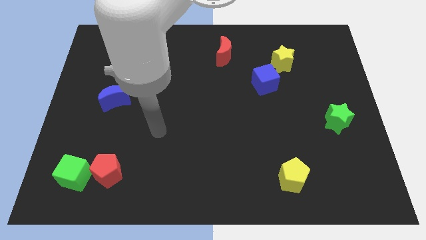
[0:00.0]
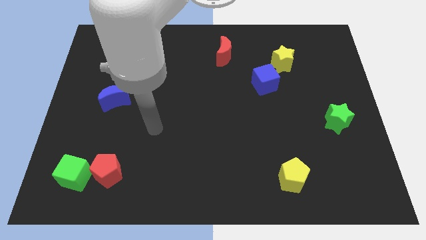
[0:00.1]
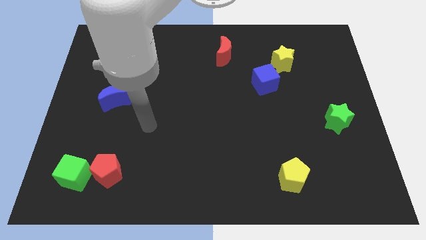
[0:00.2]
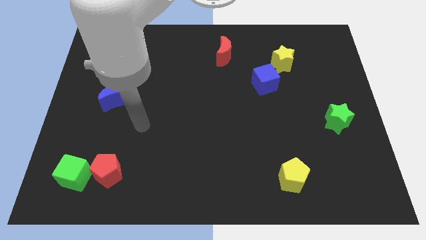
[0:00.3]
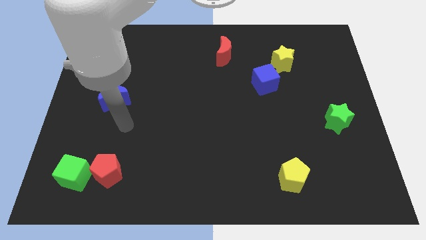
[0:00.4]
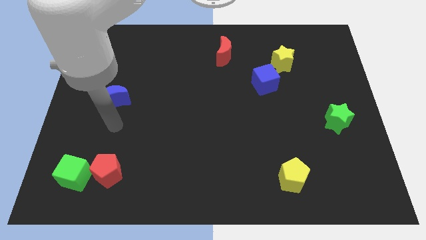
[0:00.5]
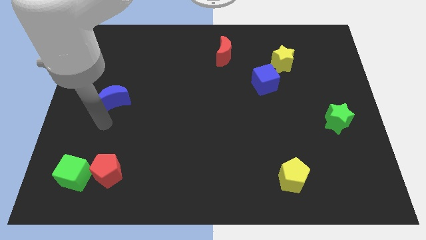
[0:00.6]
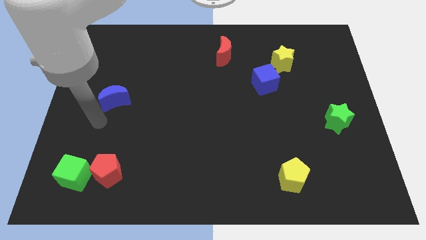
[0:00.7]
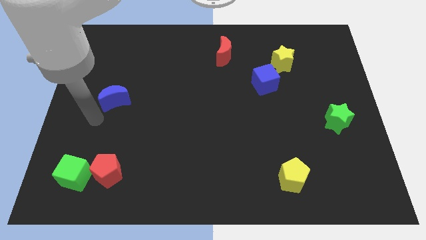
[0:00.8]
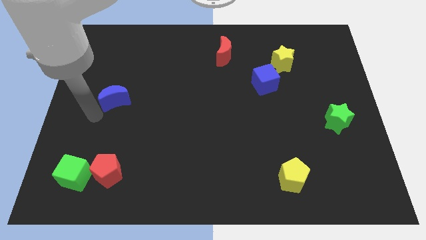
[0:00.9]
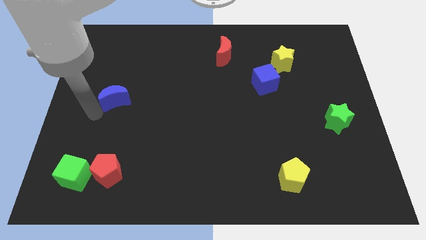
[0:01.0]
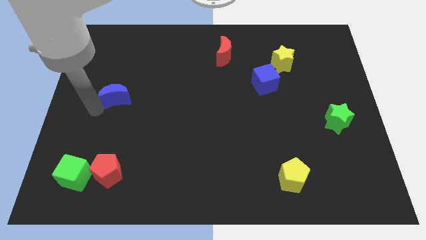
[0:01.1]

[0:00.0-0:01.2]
place the arm near the blue moon

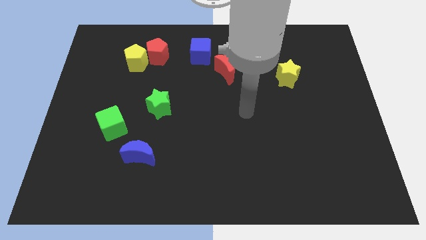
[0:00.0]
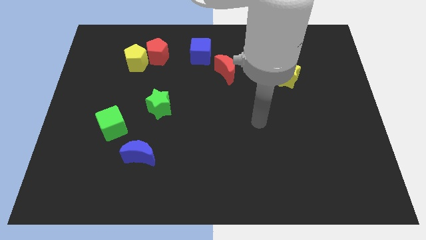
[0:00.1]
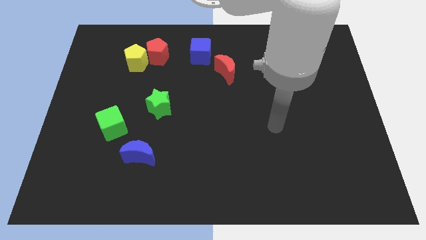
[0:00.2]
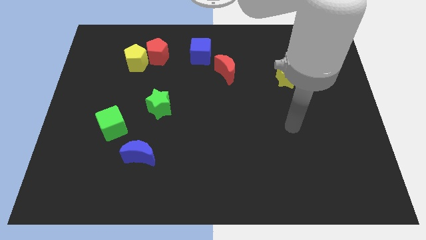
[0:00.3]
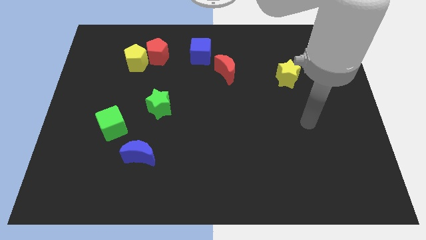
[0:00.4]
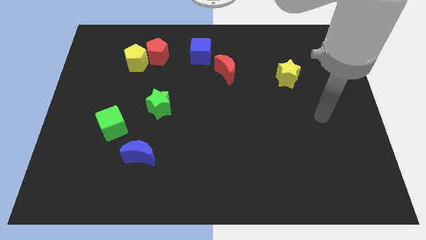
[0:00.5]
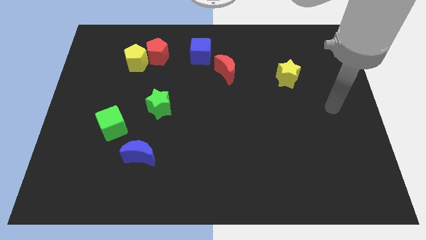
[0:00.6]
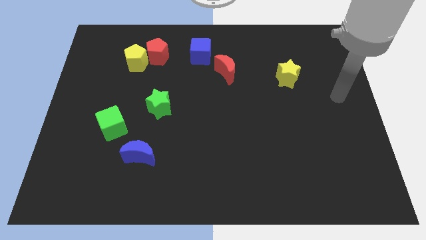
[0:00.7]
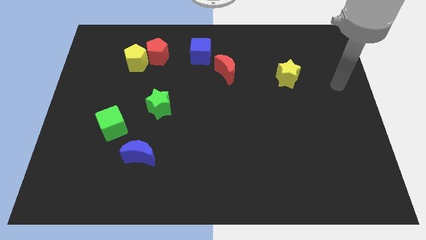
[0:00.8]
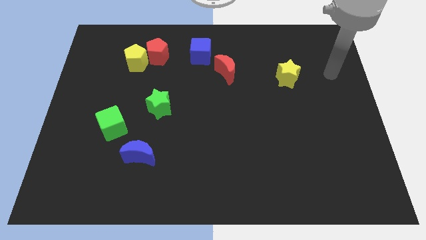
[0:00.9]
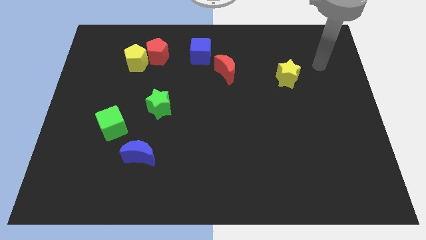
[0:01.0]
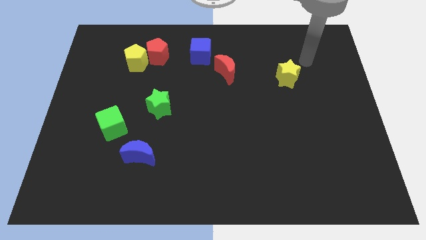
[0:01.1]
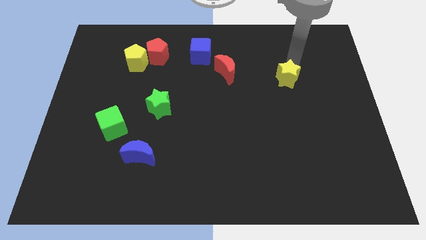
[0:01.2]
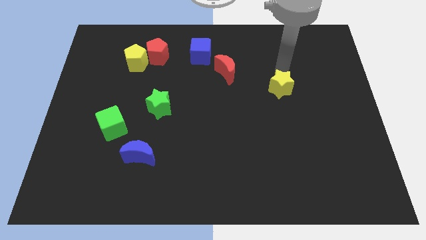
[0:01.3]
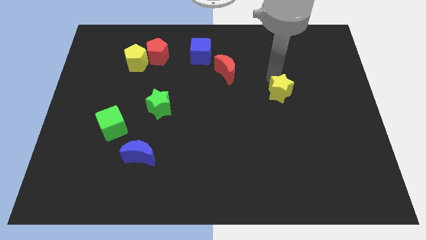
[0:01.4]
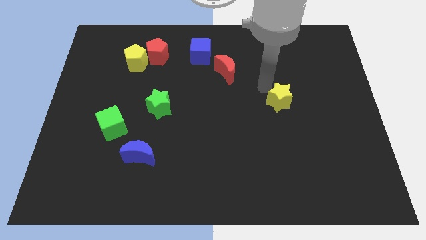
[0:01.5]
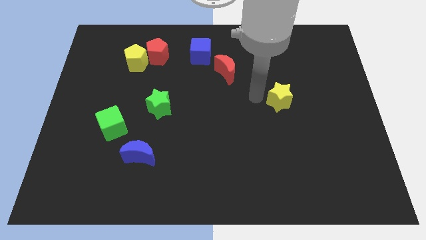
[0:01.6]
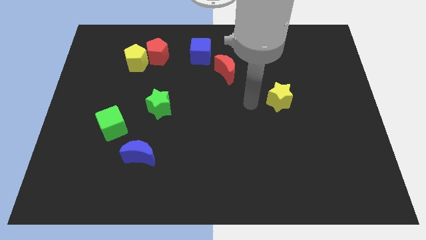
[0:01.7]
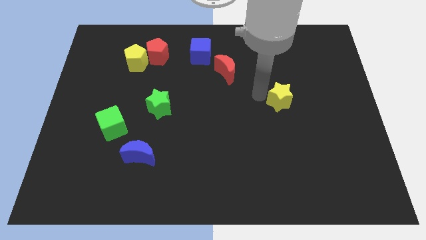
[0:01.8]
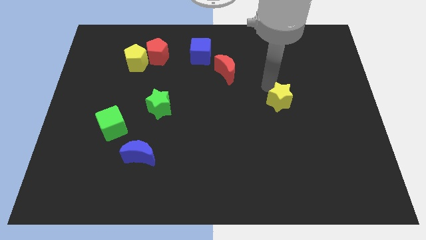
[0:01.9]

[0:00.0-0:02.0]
slightly push the yellow star towards the bottom of the board

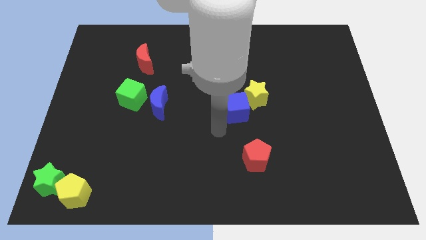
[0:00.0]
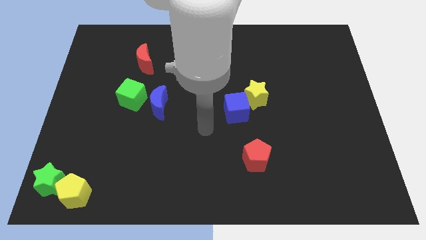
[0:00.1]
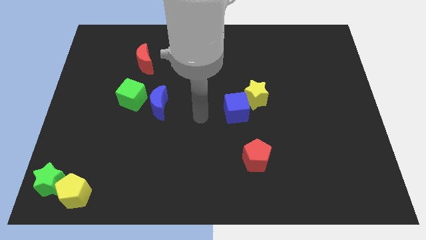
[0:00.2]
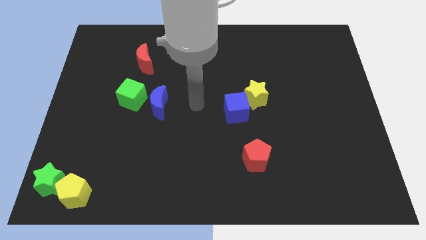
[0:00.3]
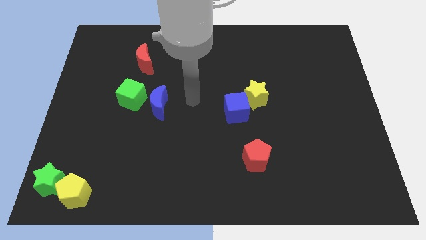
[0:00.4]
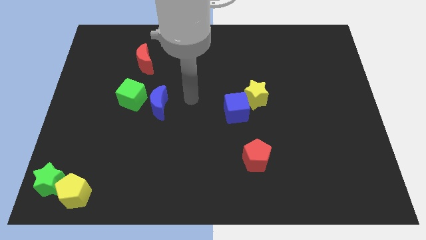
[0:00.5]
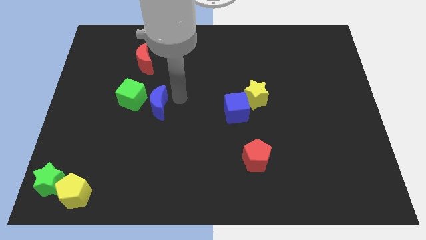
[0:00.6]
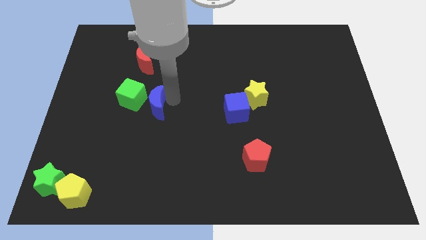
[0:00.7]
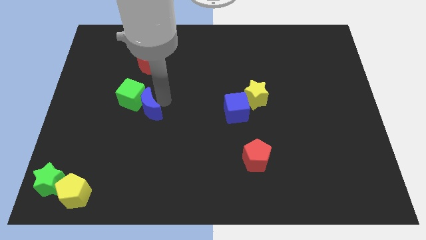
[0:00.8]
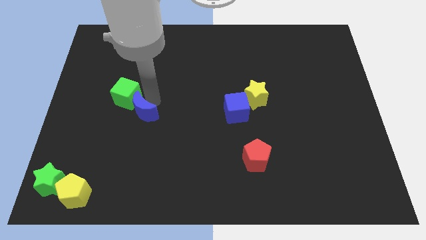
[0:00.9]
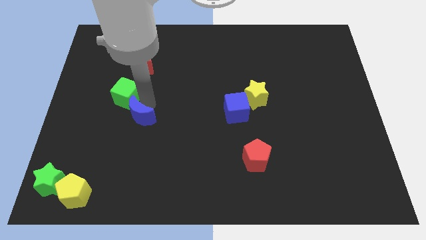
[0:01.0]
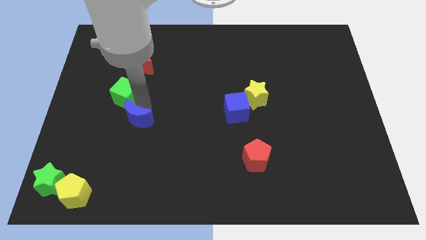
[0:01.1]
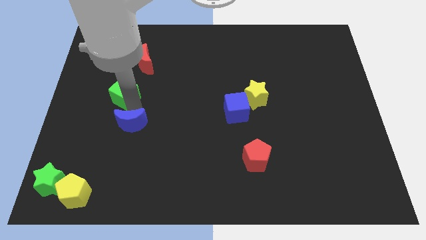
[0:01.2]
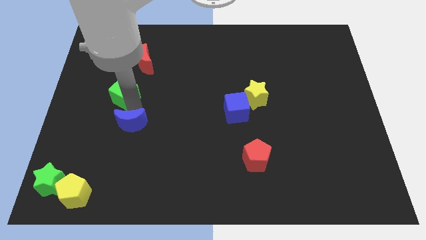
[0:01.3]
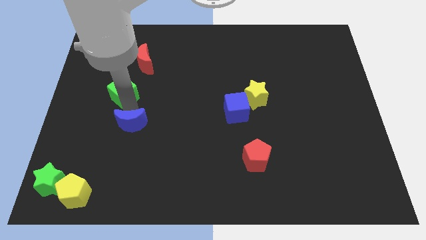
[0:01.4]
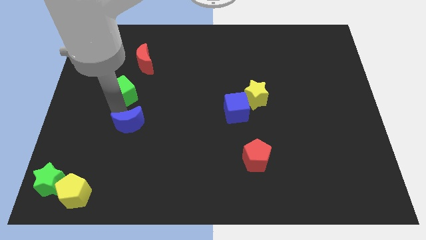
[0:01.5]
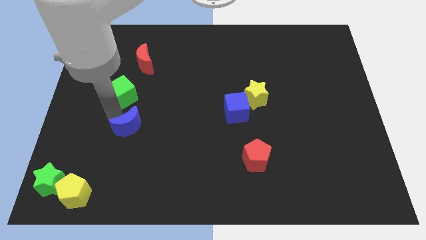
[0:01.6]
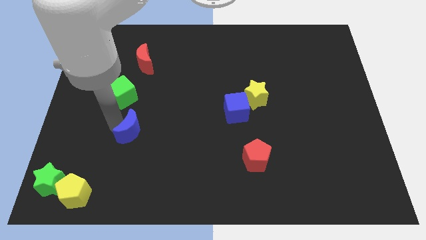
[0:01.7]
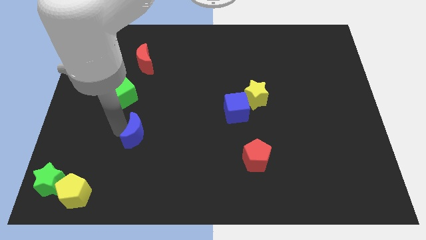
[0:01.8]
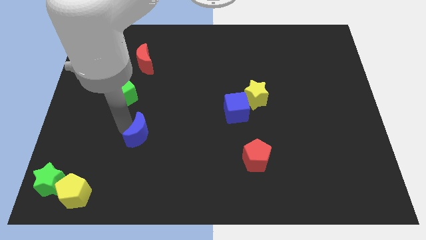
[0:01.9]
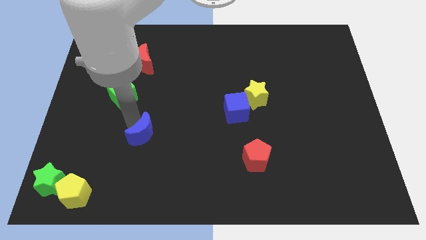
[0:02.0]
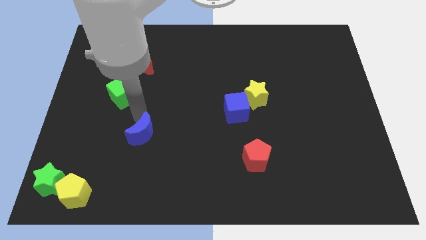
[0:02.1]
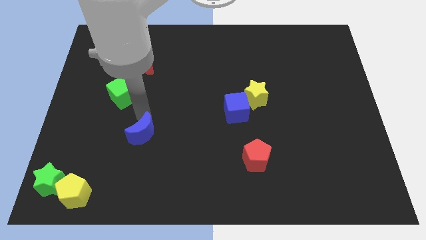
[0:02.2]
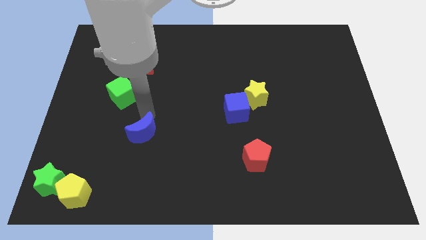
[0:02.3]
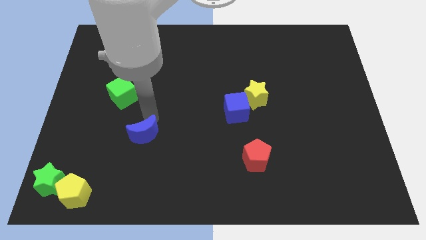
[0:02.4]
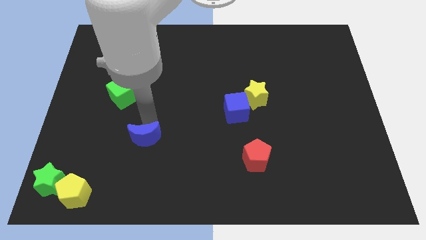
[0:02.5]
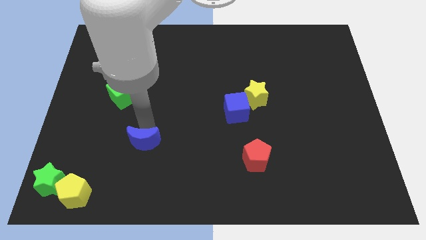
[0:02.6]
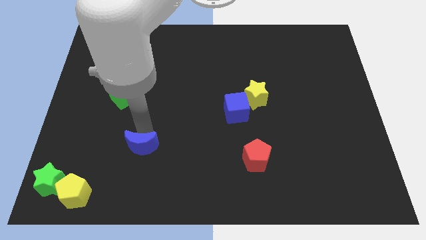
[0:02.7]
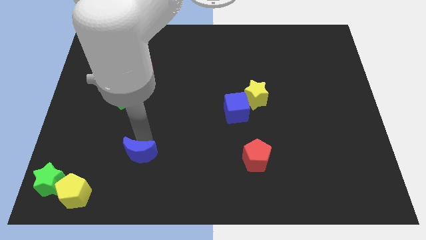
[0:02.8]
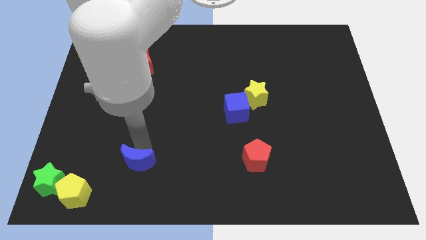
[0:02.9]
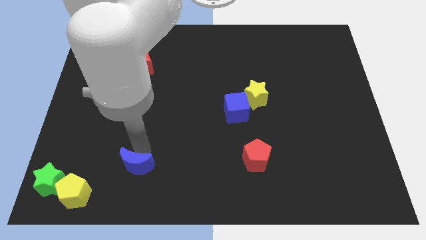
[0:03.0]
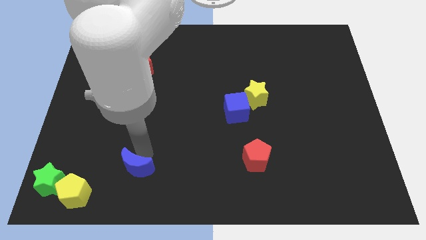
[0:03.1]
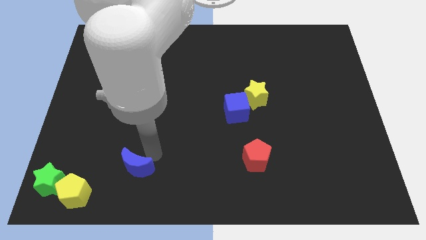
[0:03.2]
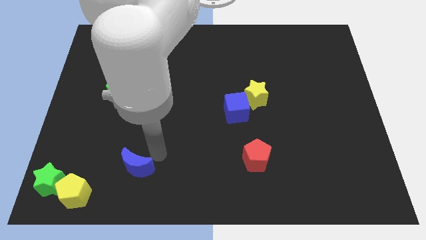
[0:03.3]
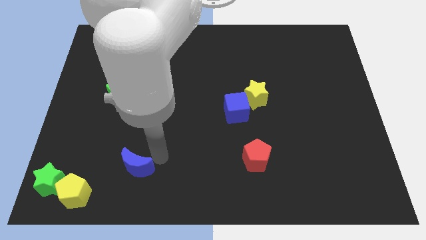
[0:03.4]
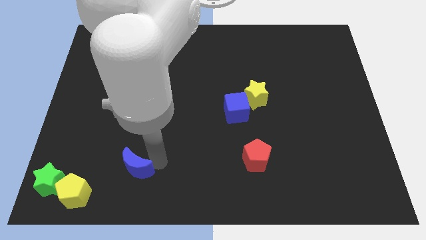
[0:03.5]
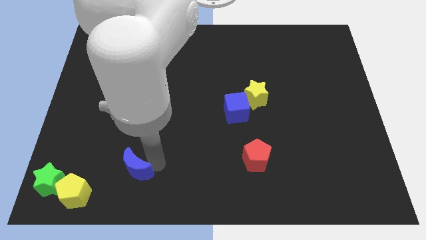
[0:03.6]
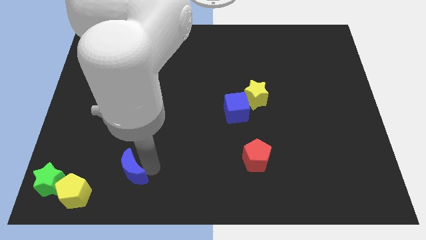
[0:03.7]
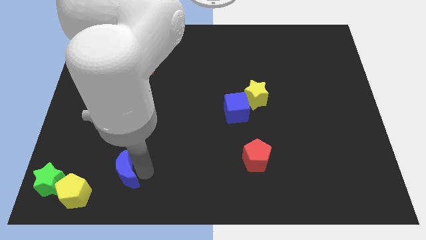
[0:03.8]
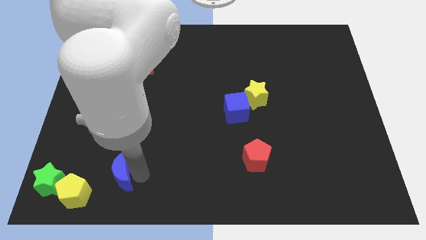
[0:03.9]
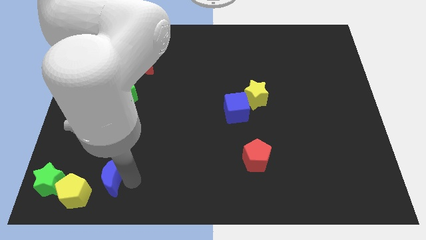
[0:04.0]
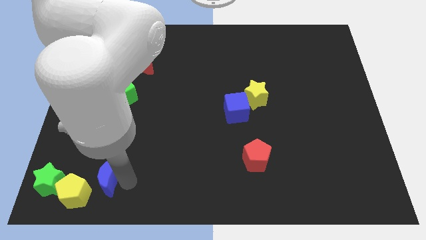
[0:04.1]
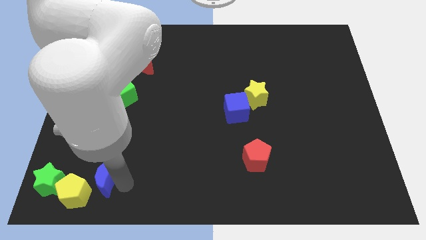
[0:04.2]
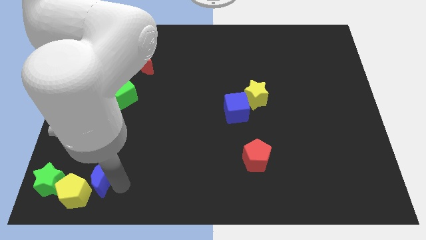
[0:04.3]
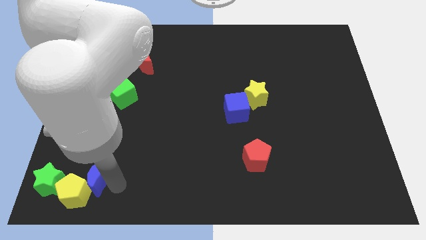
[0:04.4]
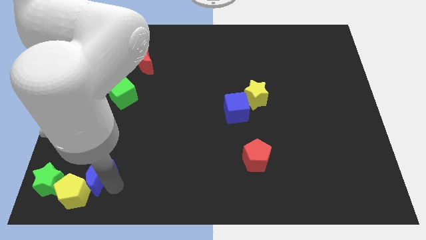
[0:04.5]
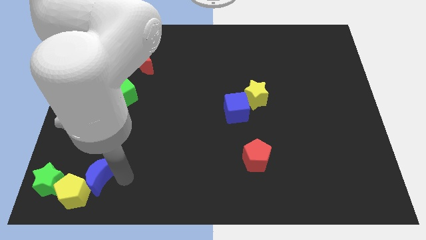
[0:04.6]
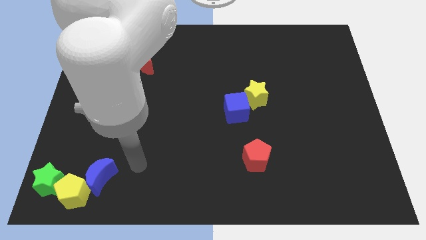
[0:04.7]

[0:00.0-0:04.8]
move the blue crescent to the top right of the yellow pentagon

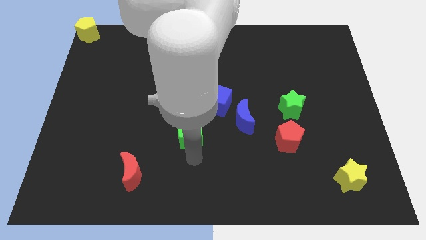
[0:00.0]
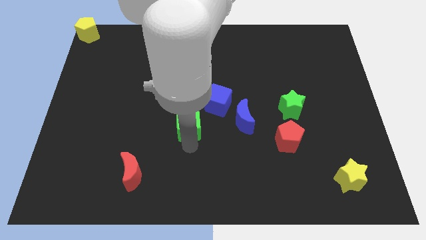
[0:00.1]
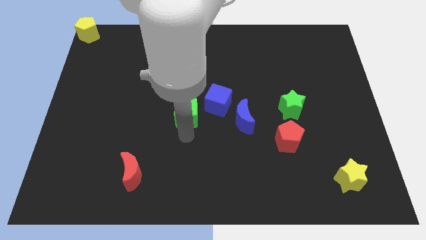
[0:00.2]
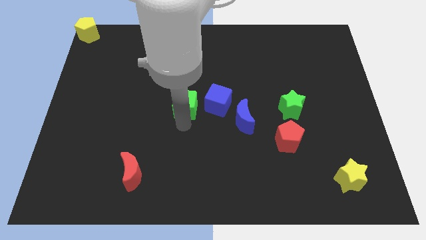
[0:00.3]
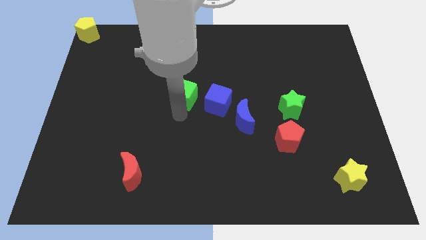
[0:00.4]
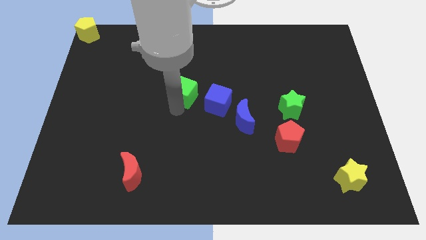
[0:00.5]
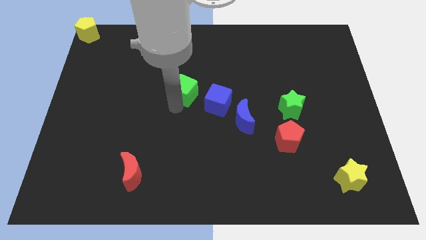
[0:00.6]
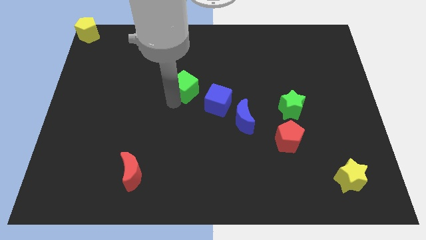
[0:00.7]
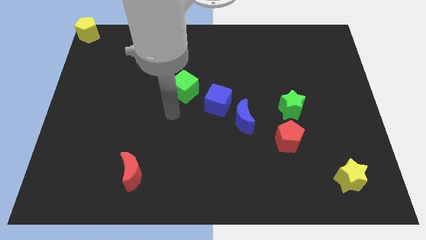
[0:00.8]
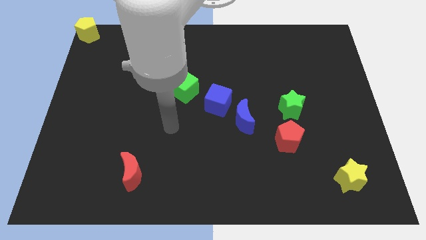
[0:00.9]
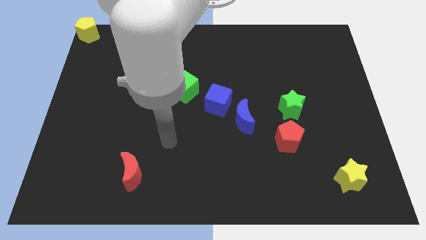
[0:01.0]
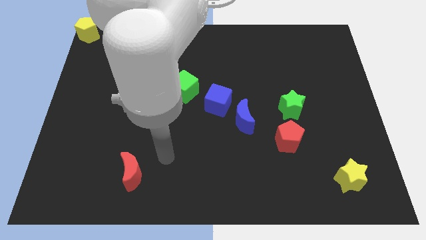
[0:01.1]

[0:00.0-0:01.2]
place the green cube diagonally top left to the blue cube
